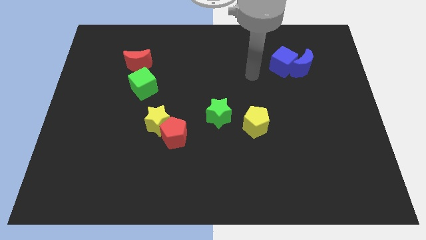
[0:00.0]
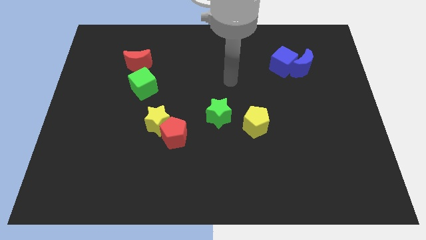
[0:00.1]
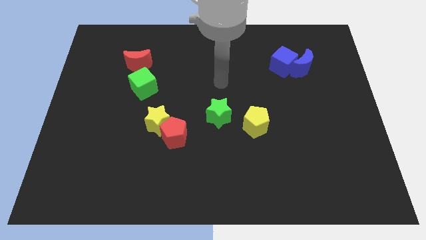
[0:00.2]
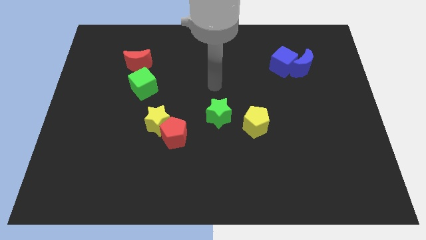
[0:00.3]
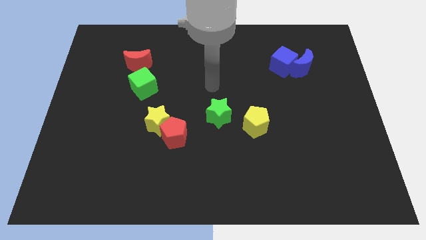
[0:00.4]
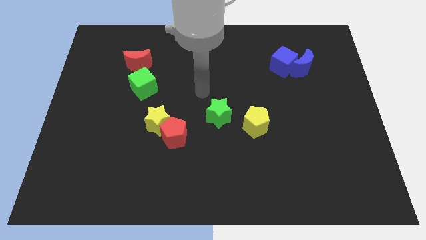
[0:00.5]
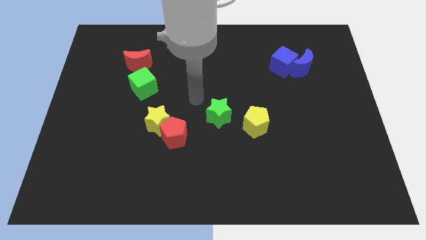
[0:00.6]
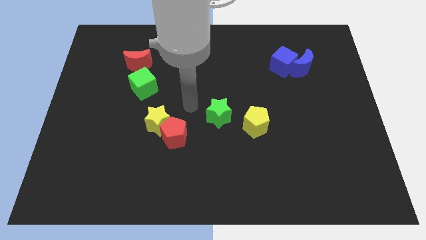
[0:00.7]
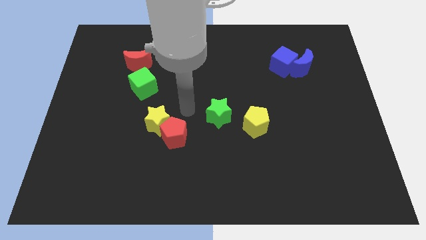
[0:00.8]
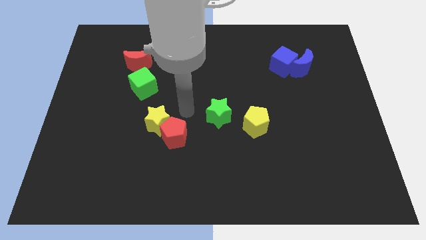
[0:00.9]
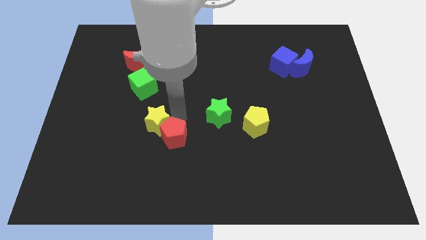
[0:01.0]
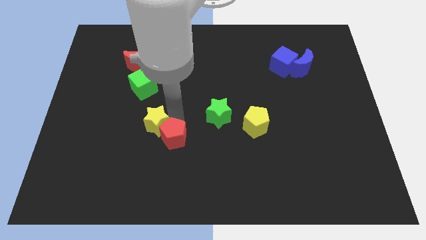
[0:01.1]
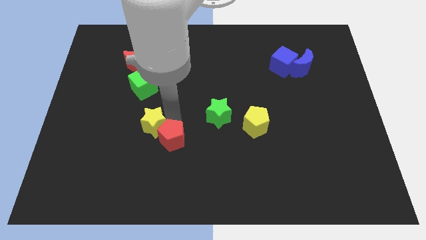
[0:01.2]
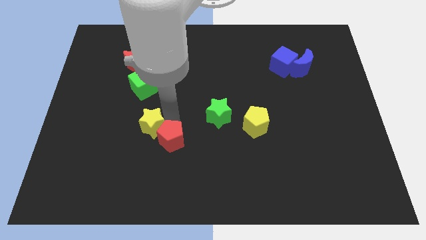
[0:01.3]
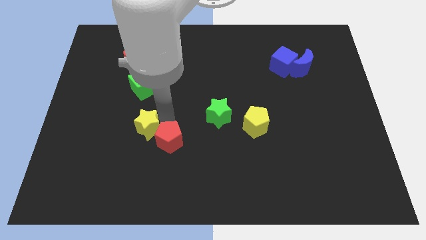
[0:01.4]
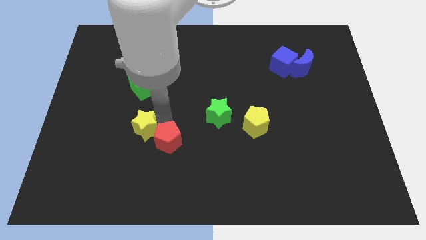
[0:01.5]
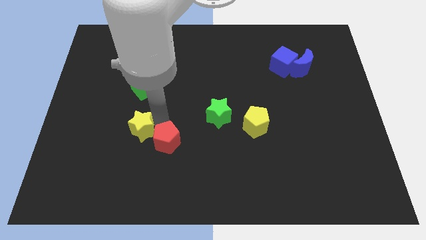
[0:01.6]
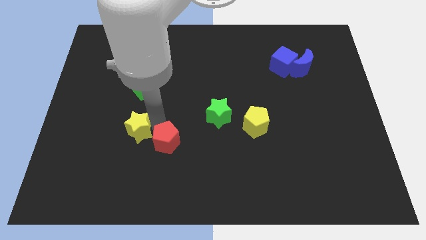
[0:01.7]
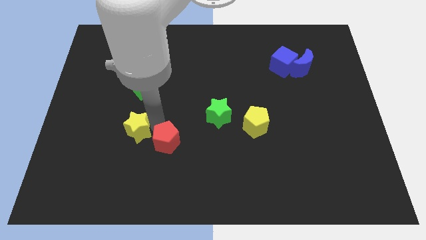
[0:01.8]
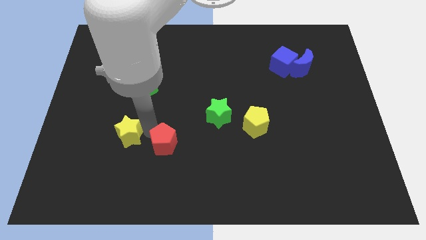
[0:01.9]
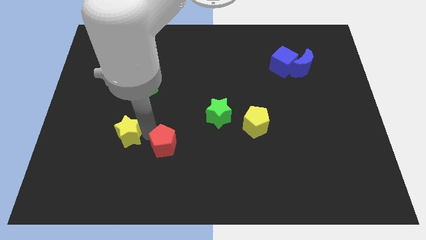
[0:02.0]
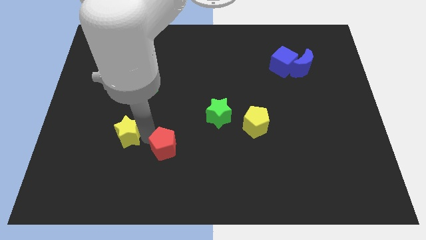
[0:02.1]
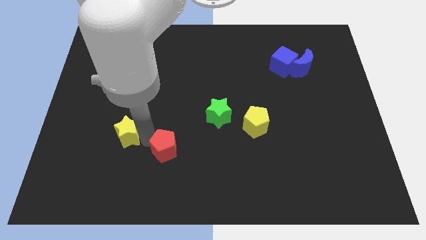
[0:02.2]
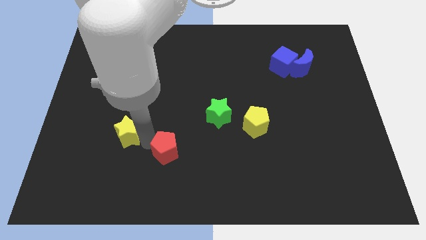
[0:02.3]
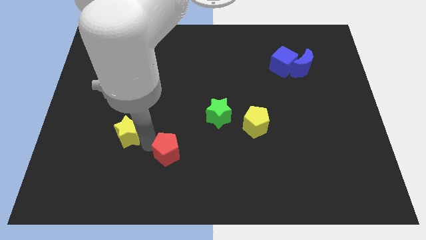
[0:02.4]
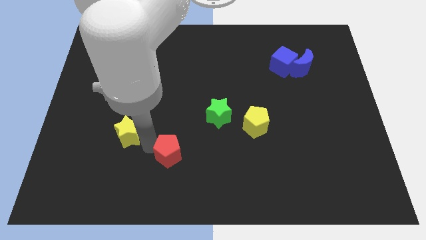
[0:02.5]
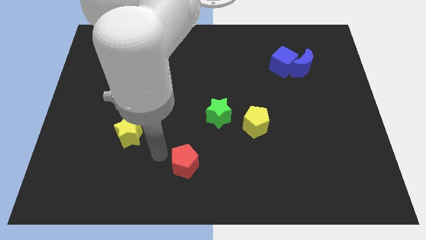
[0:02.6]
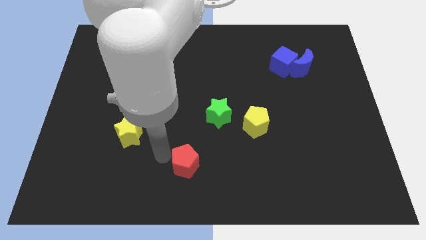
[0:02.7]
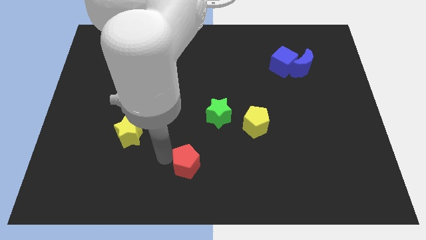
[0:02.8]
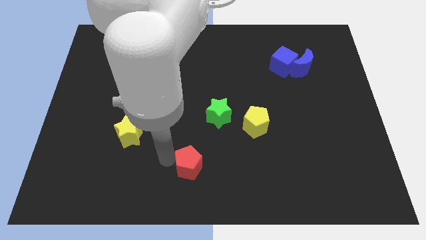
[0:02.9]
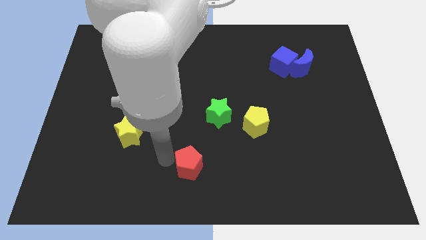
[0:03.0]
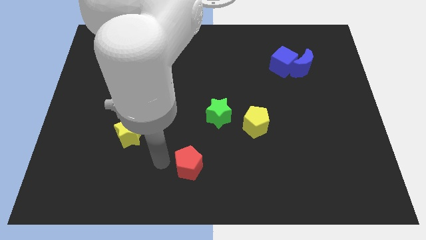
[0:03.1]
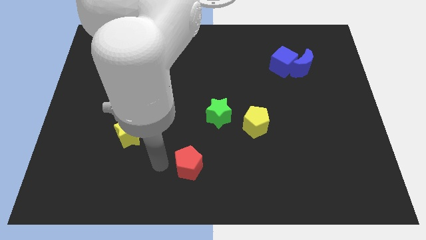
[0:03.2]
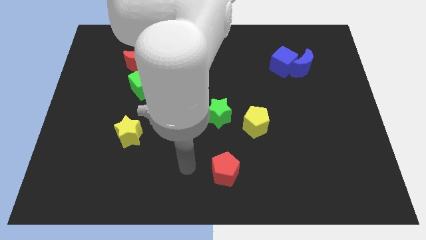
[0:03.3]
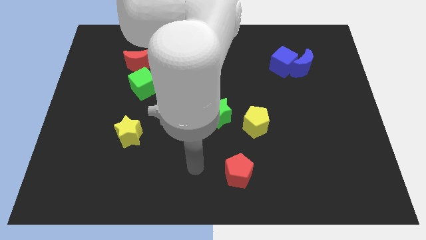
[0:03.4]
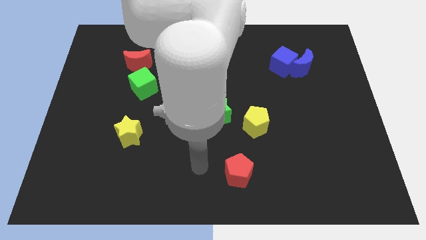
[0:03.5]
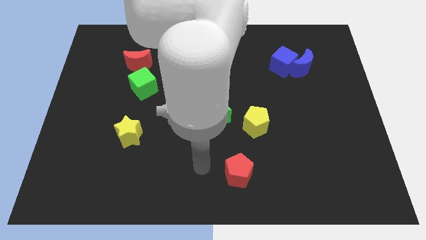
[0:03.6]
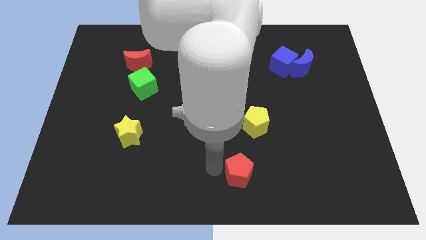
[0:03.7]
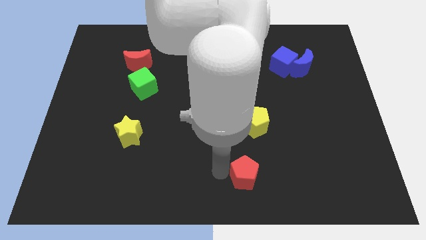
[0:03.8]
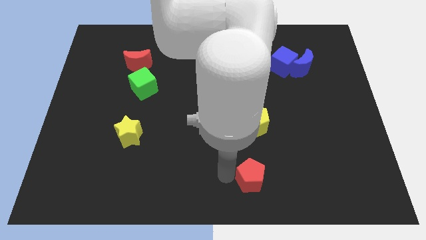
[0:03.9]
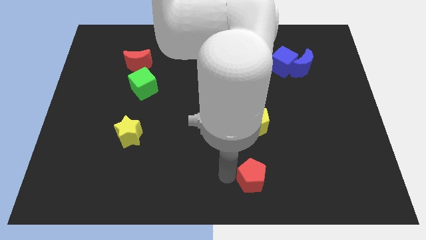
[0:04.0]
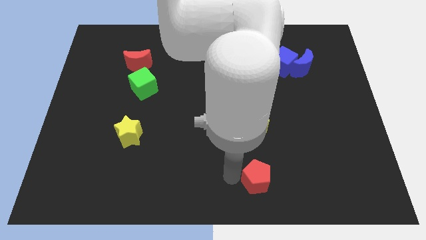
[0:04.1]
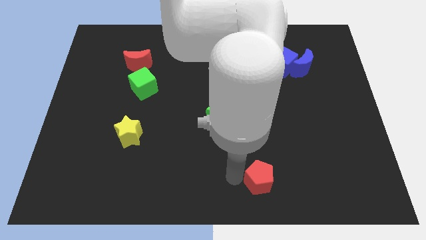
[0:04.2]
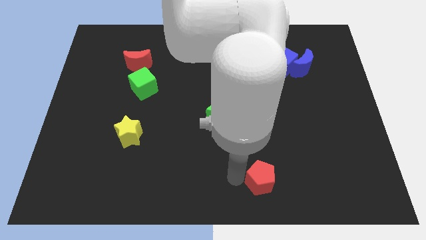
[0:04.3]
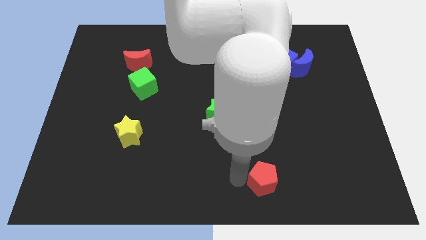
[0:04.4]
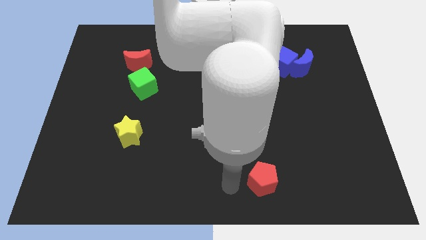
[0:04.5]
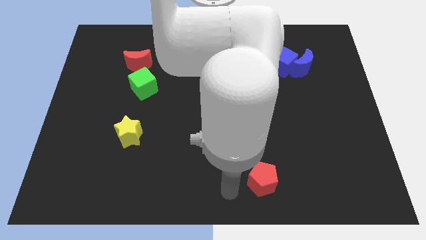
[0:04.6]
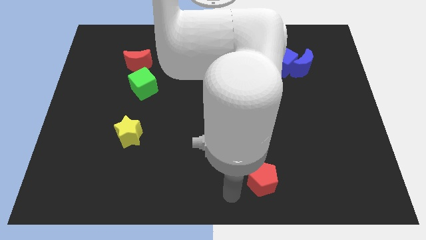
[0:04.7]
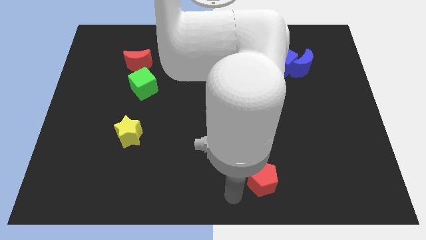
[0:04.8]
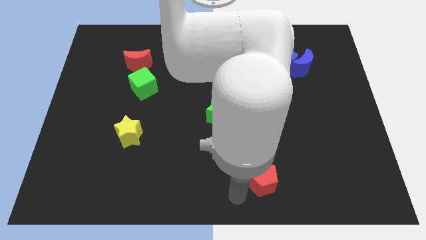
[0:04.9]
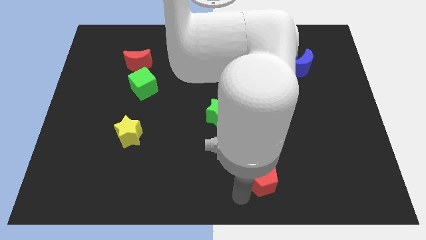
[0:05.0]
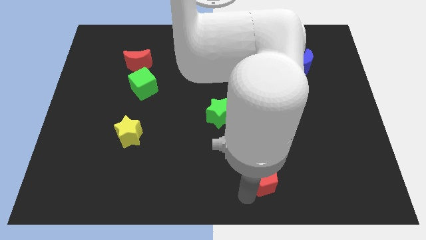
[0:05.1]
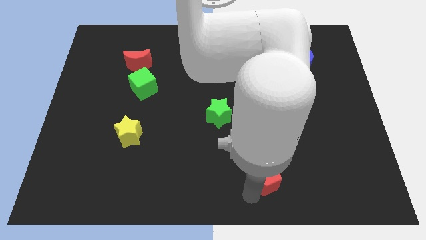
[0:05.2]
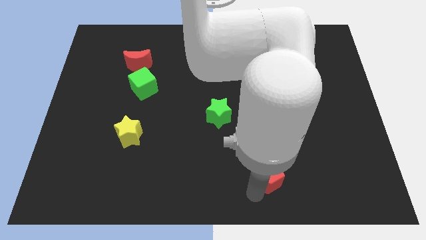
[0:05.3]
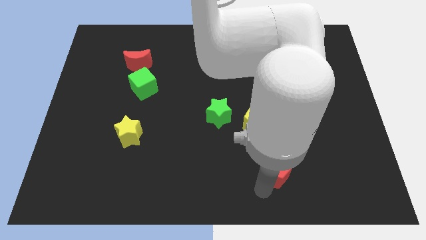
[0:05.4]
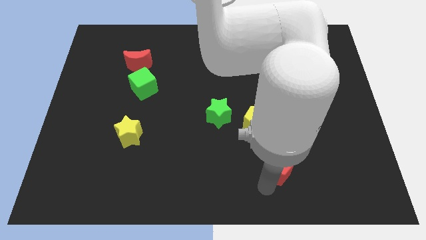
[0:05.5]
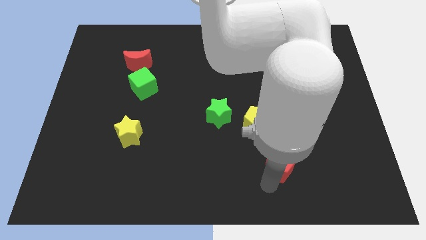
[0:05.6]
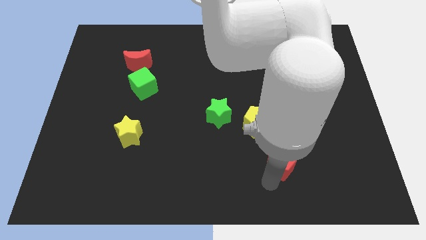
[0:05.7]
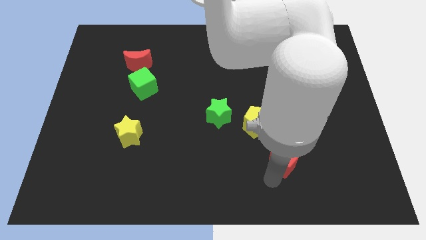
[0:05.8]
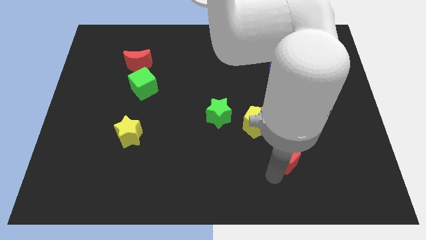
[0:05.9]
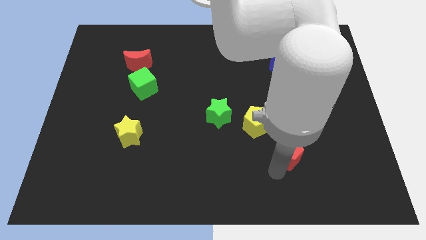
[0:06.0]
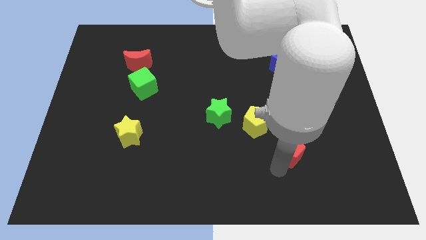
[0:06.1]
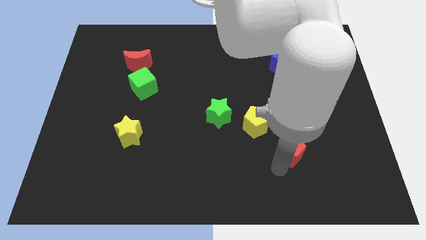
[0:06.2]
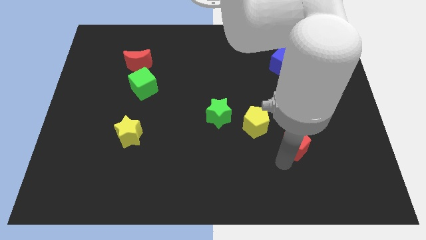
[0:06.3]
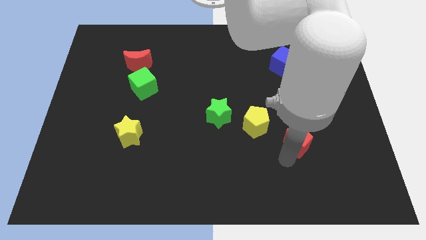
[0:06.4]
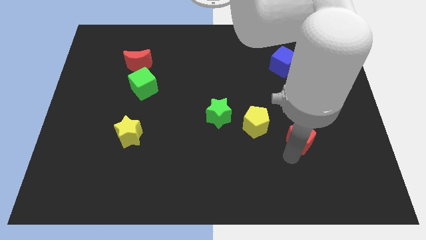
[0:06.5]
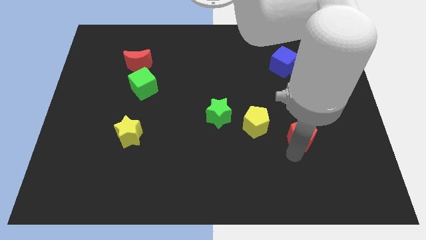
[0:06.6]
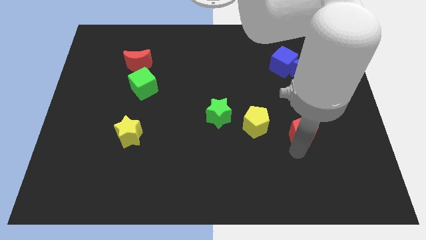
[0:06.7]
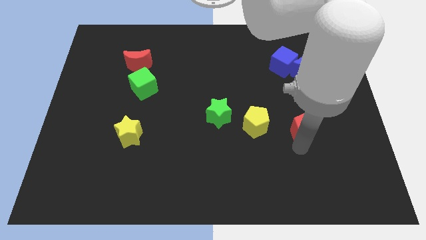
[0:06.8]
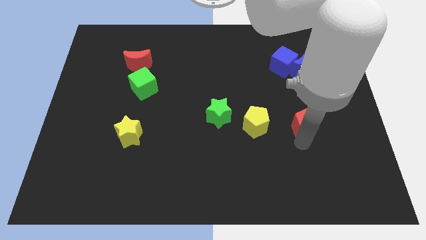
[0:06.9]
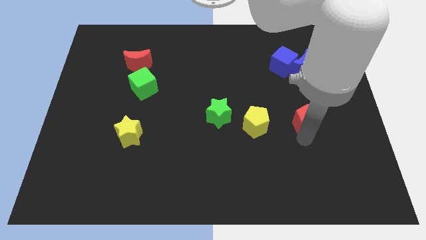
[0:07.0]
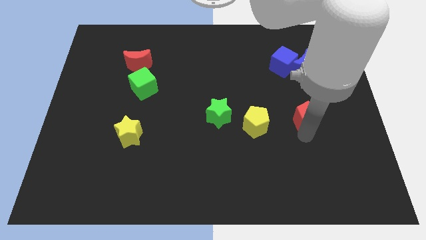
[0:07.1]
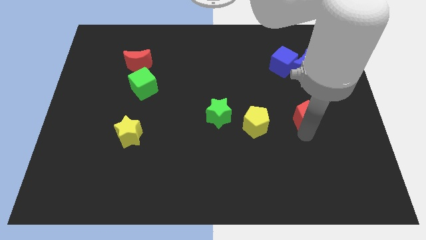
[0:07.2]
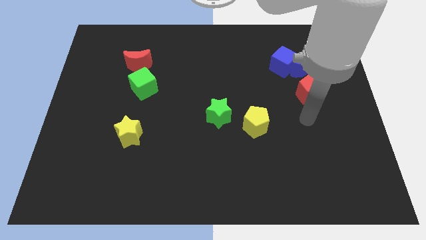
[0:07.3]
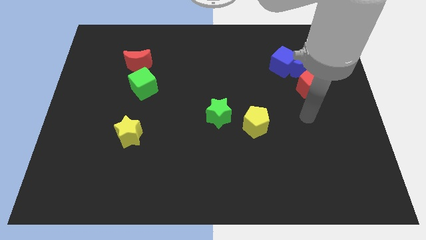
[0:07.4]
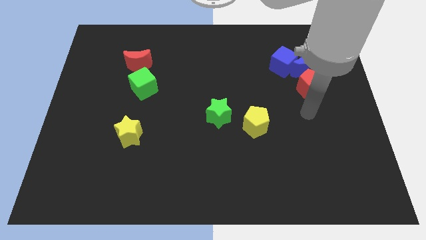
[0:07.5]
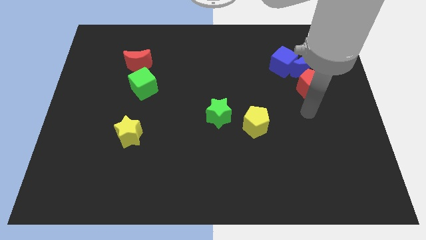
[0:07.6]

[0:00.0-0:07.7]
put the red pentagon close to the blue moon

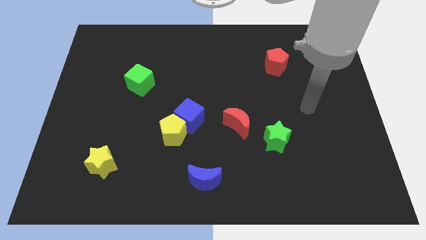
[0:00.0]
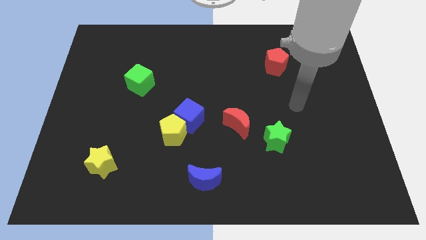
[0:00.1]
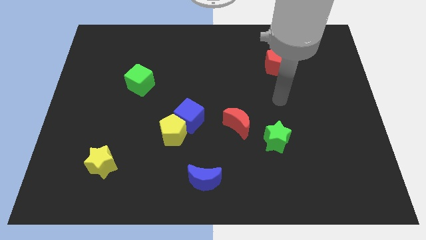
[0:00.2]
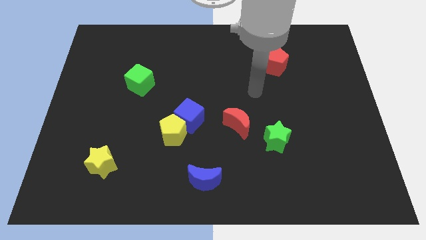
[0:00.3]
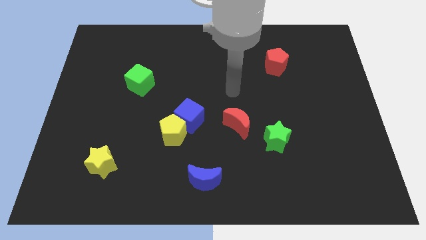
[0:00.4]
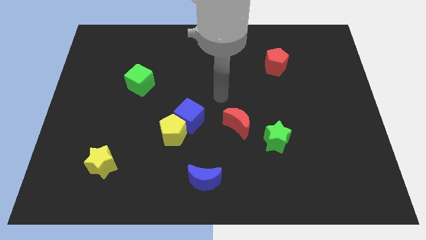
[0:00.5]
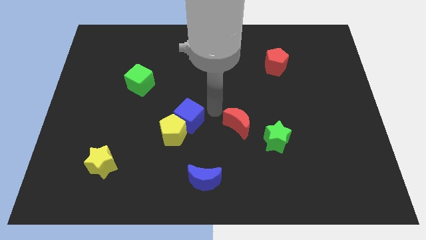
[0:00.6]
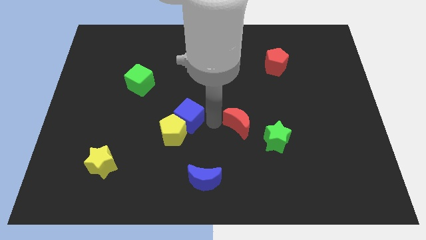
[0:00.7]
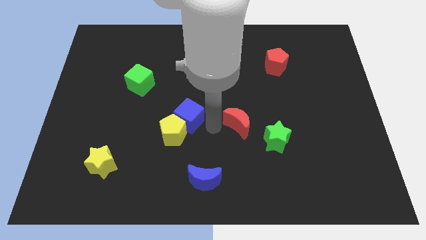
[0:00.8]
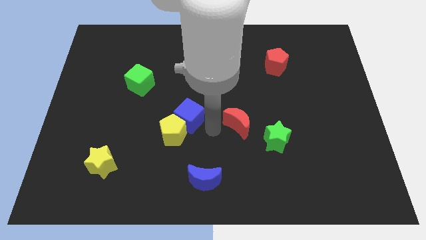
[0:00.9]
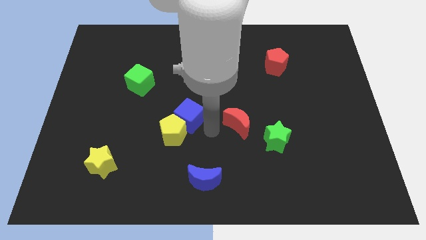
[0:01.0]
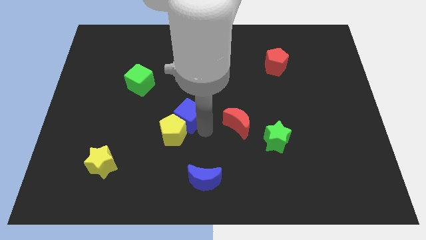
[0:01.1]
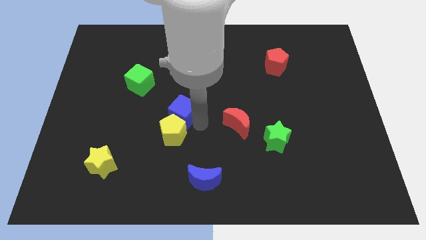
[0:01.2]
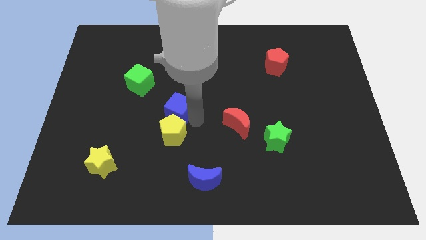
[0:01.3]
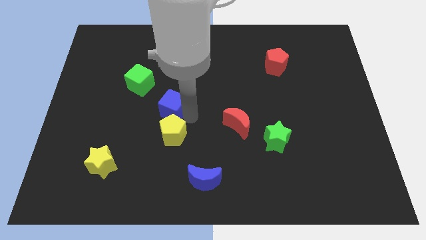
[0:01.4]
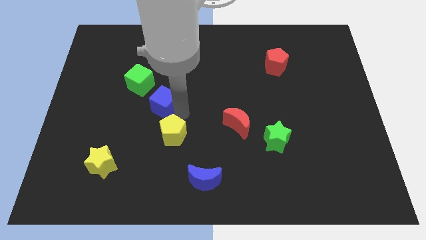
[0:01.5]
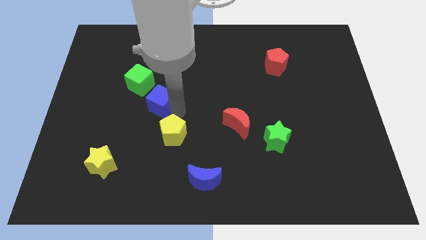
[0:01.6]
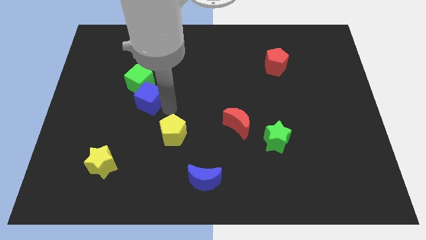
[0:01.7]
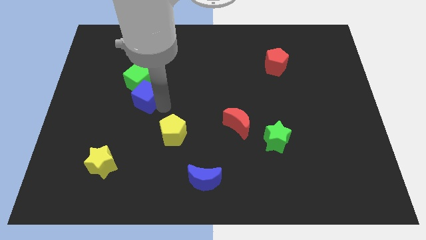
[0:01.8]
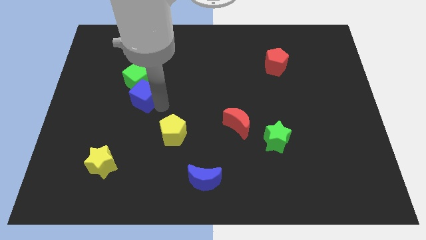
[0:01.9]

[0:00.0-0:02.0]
push the blue cube close to the green cube
